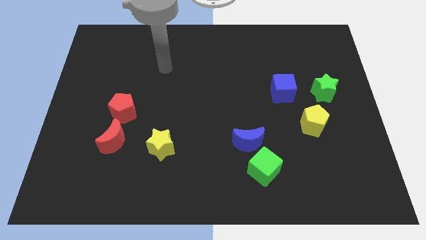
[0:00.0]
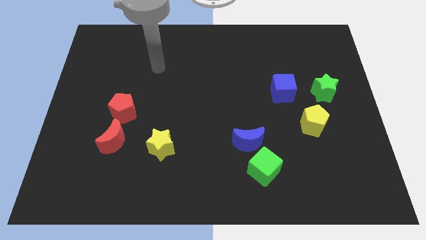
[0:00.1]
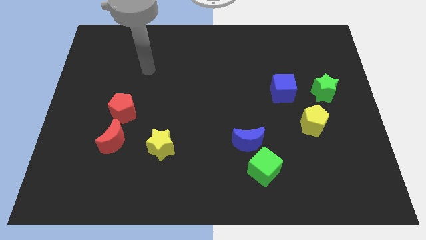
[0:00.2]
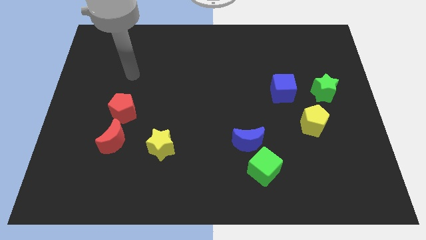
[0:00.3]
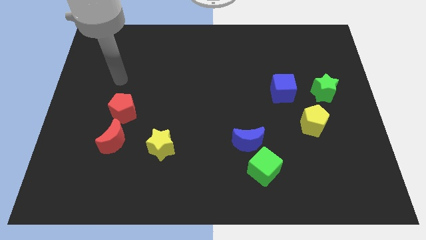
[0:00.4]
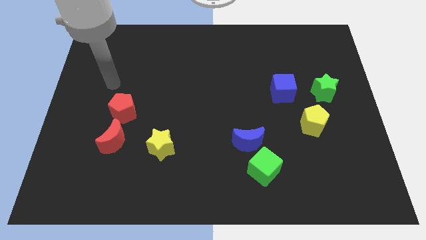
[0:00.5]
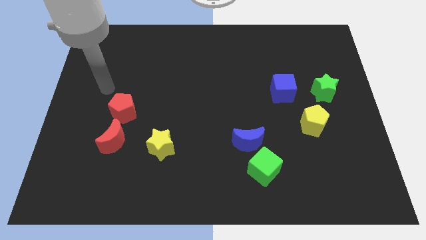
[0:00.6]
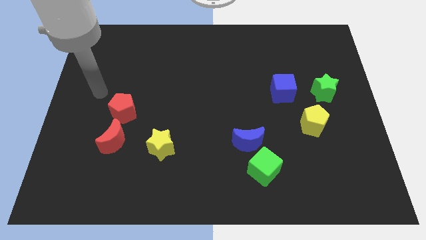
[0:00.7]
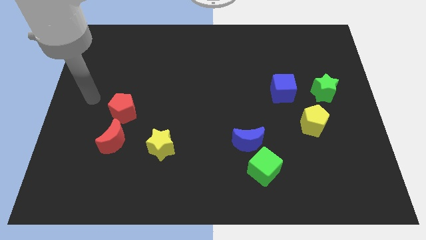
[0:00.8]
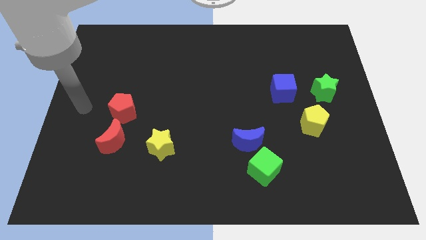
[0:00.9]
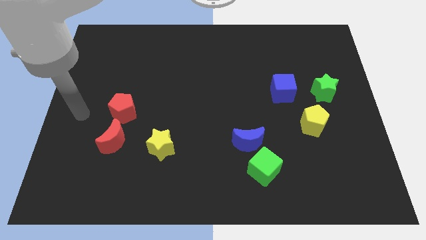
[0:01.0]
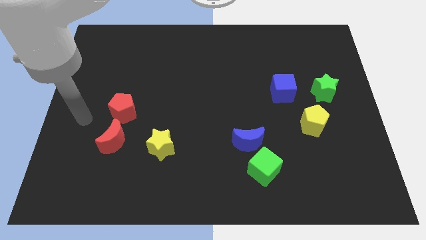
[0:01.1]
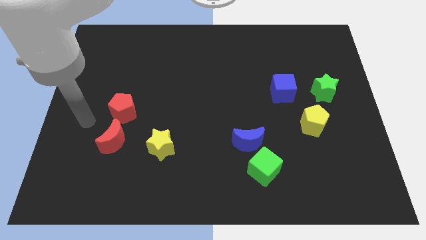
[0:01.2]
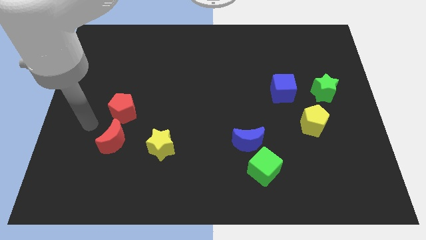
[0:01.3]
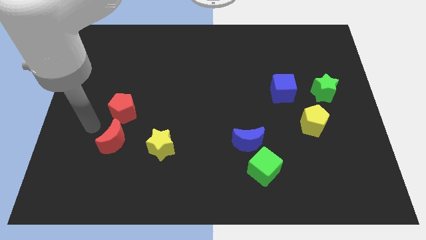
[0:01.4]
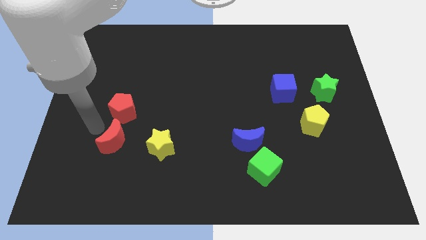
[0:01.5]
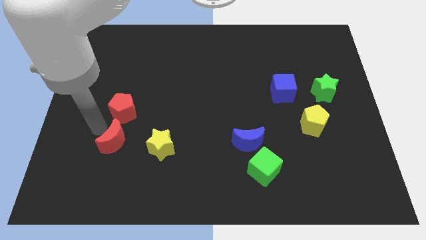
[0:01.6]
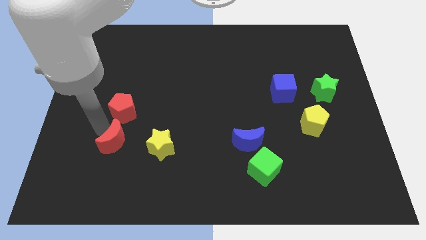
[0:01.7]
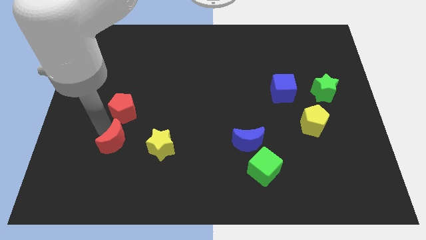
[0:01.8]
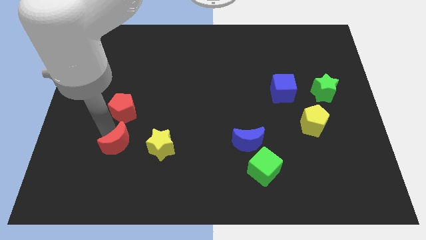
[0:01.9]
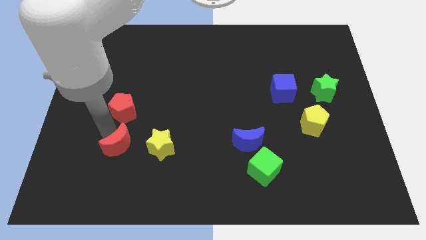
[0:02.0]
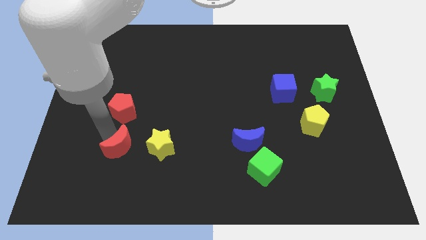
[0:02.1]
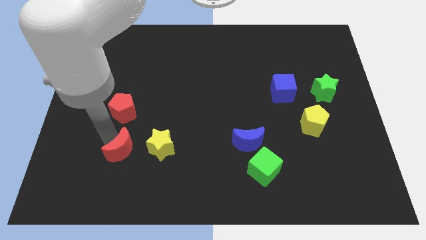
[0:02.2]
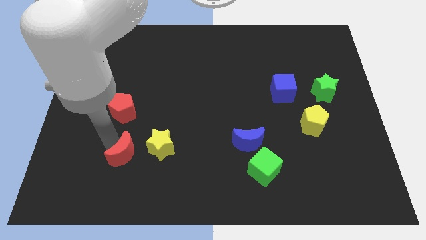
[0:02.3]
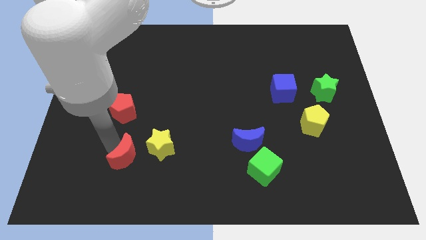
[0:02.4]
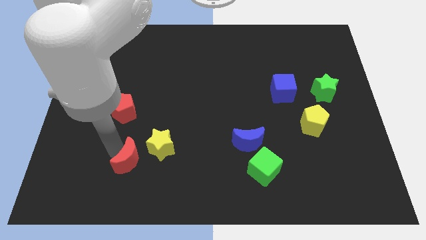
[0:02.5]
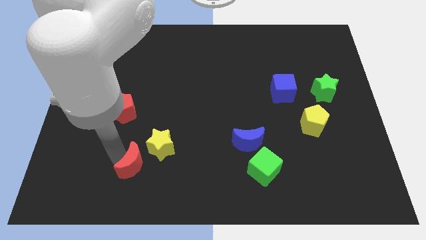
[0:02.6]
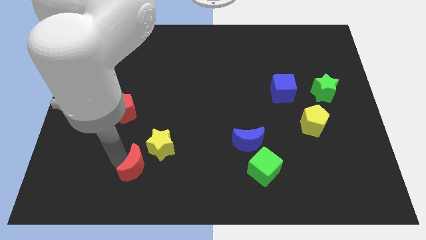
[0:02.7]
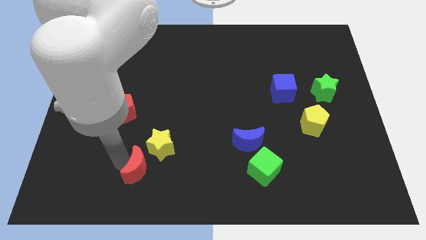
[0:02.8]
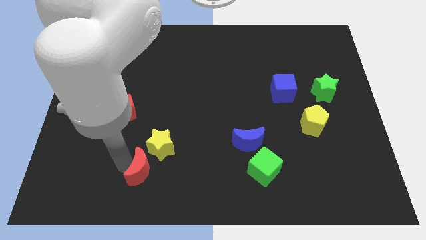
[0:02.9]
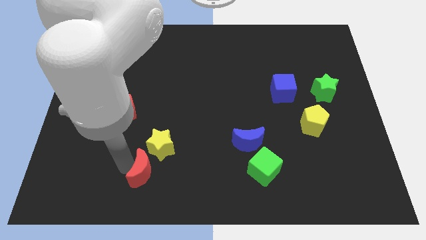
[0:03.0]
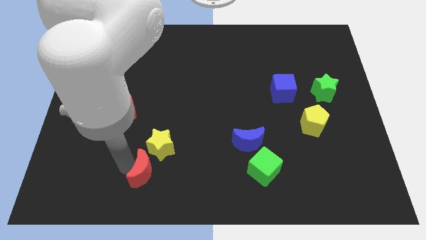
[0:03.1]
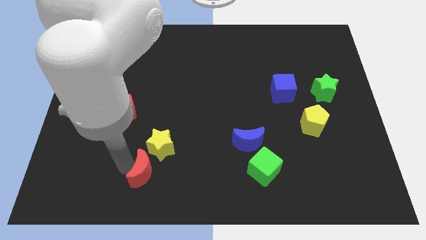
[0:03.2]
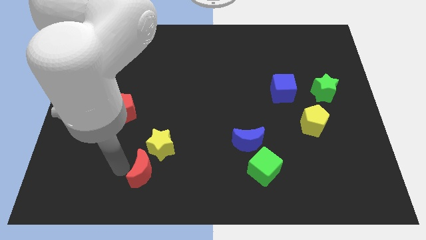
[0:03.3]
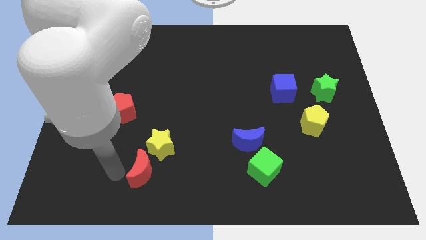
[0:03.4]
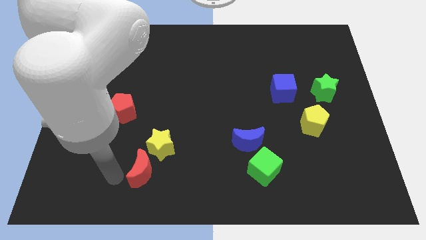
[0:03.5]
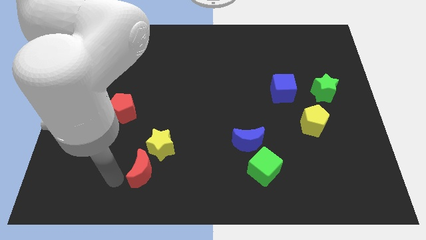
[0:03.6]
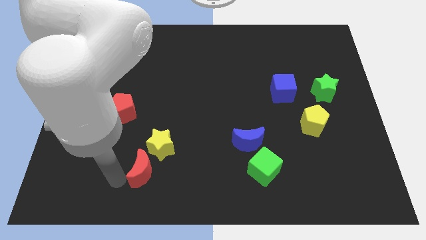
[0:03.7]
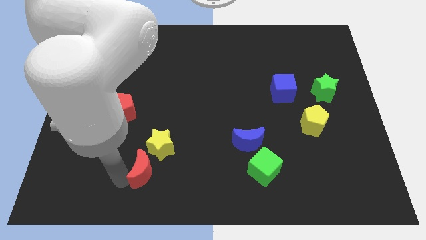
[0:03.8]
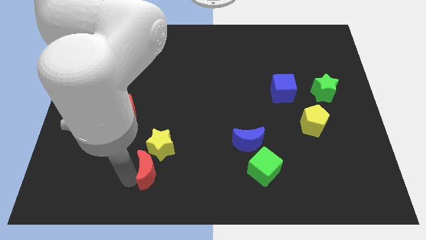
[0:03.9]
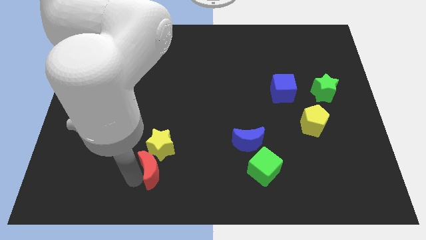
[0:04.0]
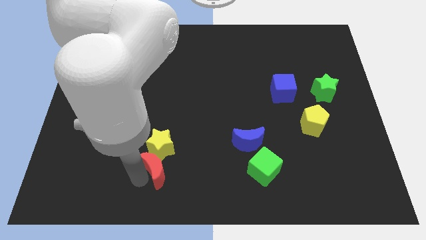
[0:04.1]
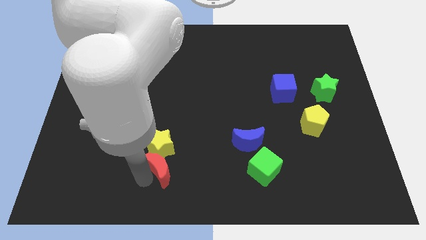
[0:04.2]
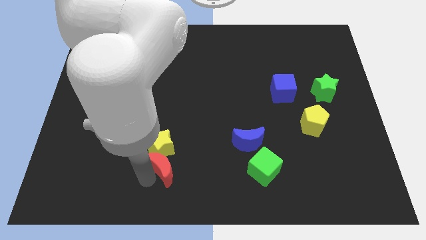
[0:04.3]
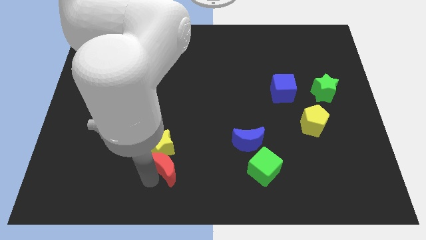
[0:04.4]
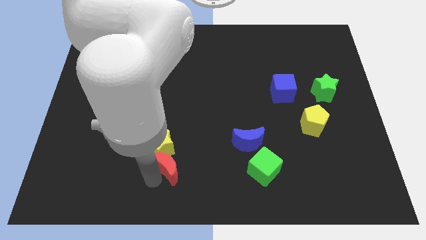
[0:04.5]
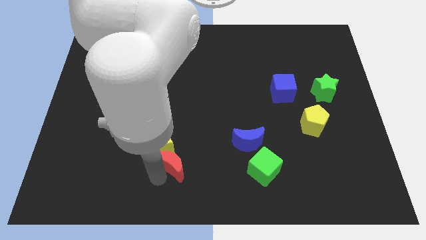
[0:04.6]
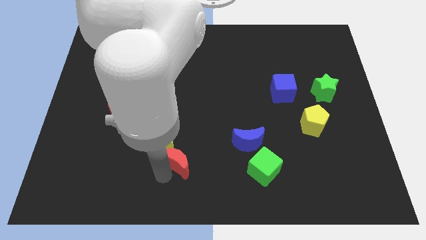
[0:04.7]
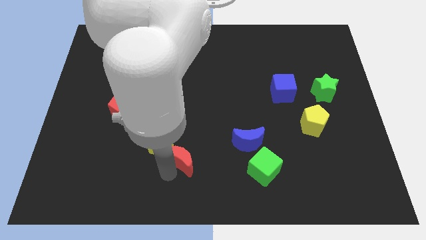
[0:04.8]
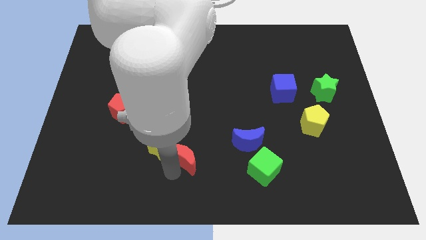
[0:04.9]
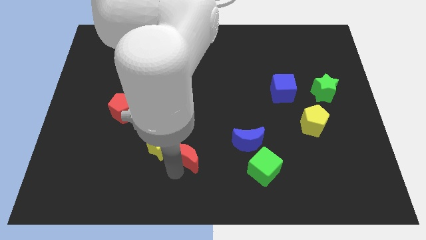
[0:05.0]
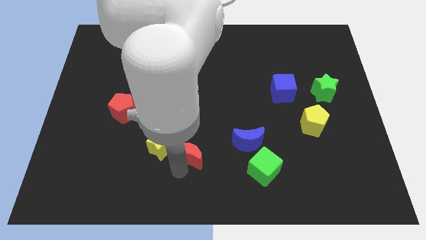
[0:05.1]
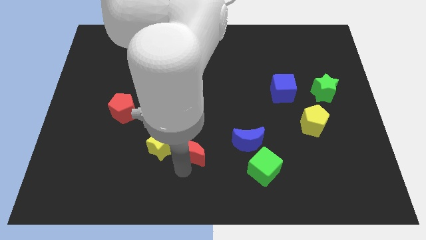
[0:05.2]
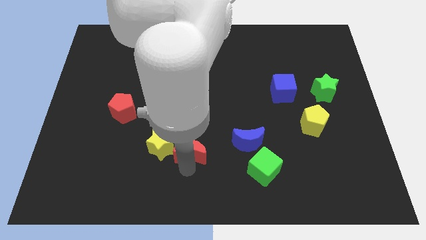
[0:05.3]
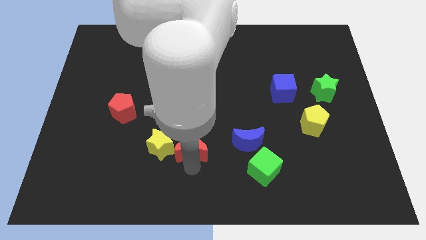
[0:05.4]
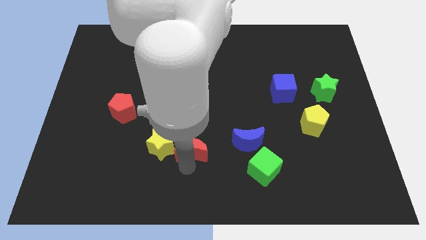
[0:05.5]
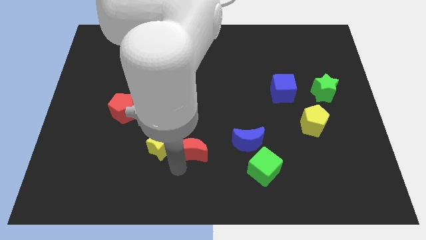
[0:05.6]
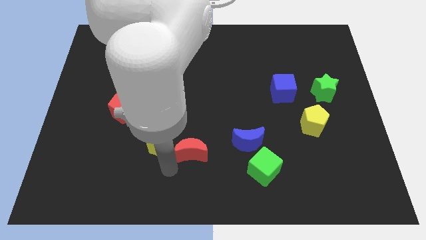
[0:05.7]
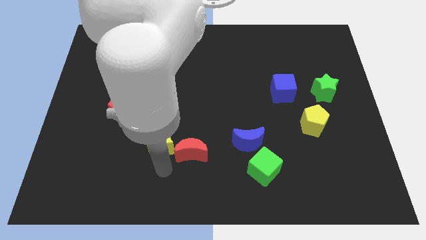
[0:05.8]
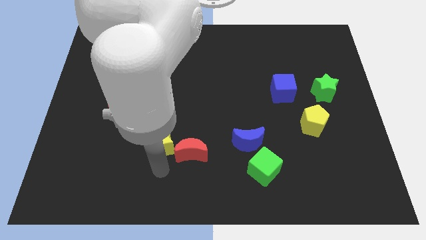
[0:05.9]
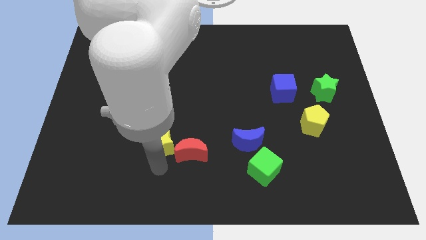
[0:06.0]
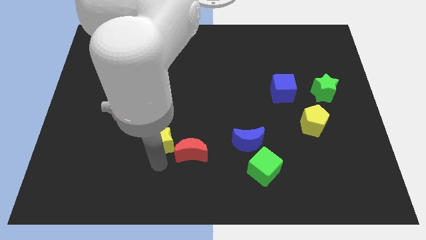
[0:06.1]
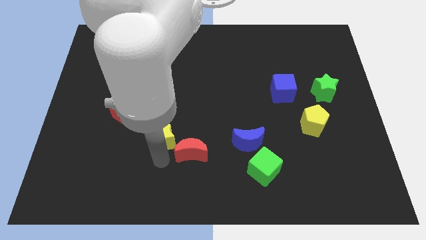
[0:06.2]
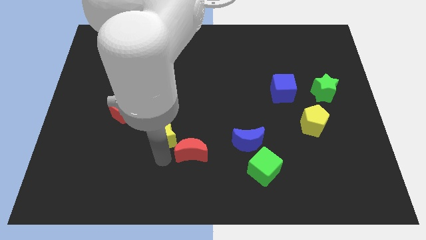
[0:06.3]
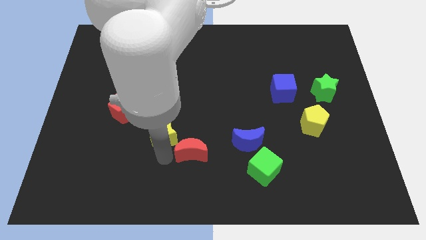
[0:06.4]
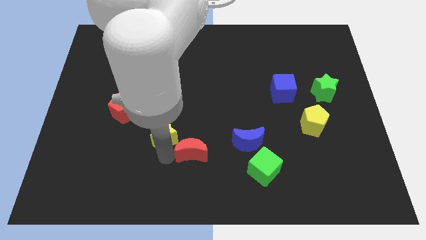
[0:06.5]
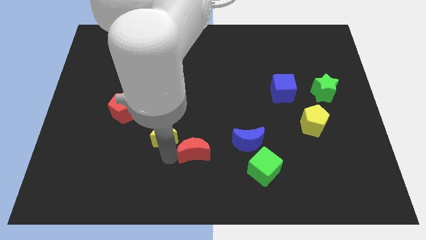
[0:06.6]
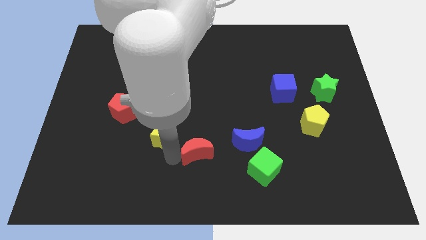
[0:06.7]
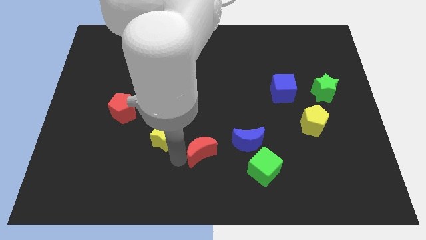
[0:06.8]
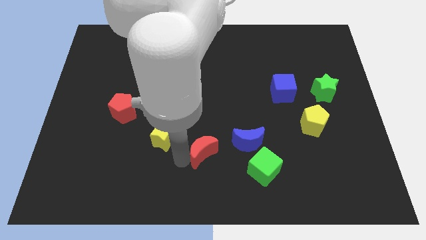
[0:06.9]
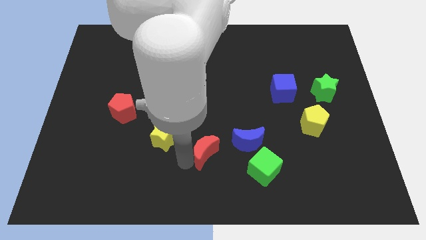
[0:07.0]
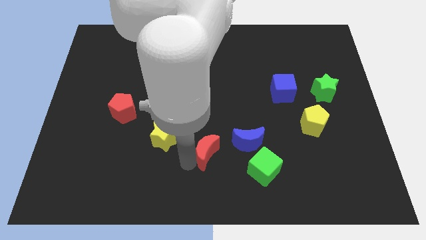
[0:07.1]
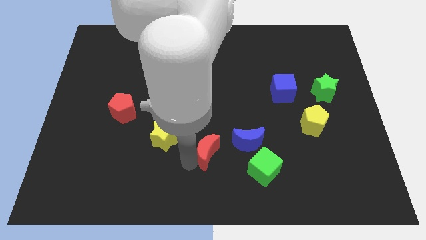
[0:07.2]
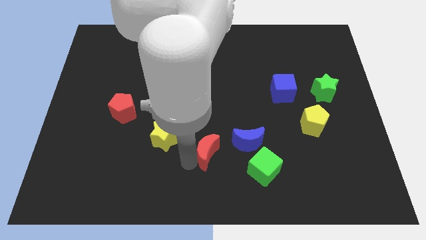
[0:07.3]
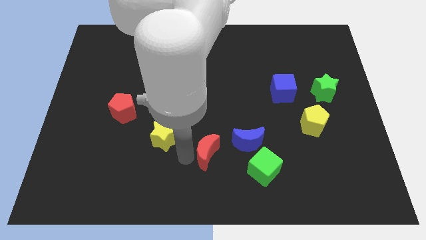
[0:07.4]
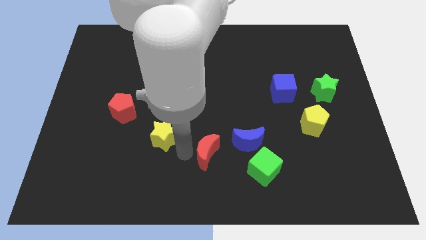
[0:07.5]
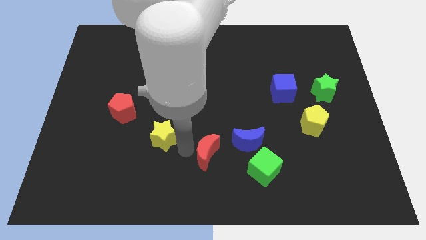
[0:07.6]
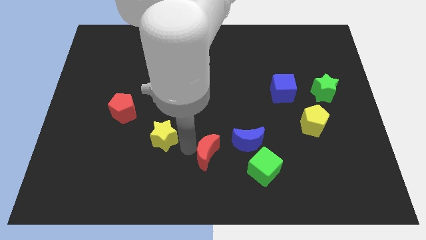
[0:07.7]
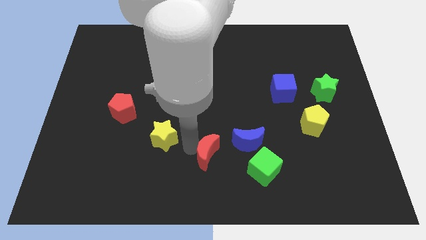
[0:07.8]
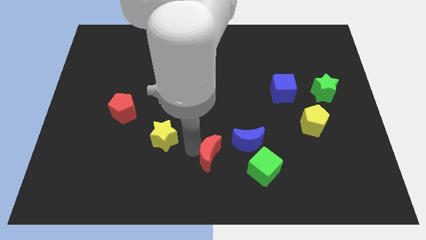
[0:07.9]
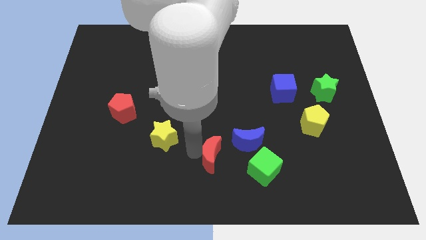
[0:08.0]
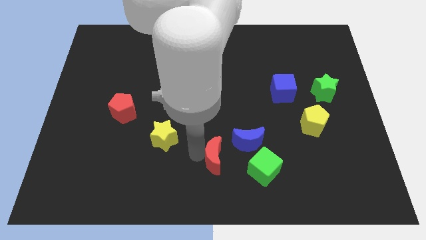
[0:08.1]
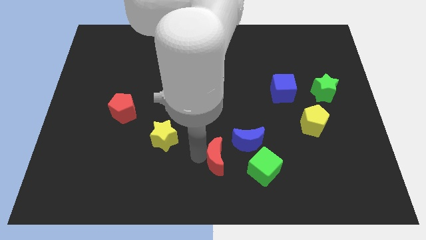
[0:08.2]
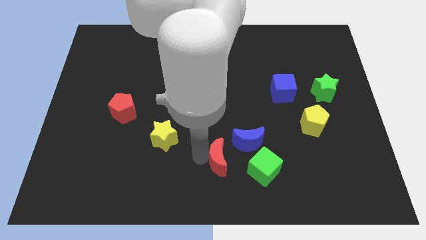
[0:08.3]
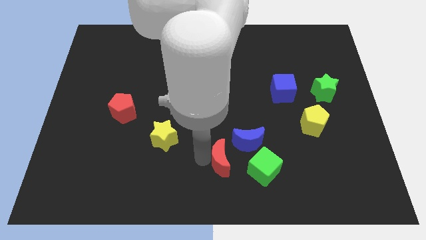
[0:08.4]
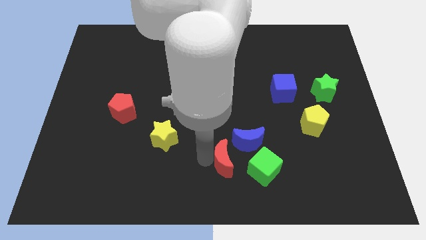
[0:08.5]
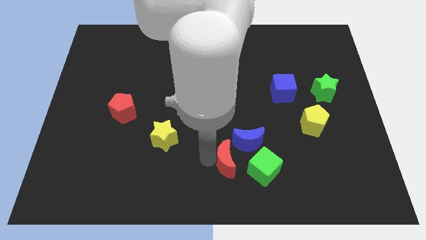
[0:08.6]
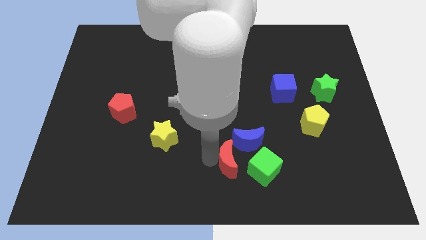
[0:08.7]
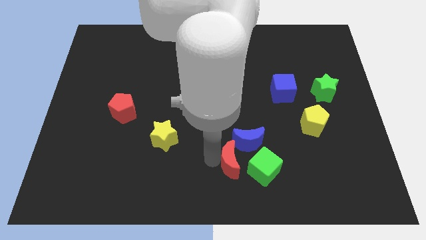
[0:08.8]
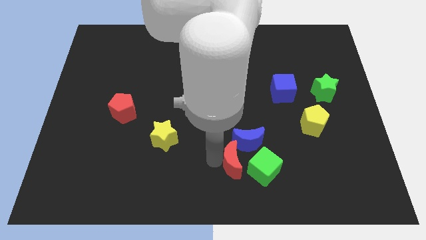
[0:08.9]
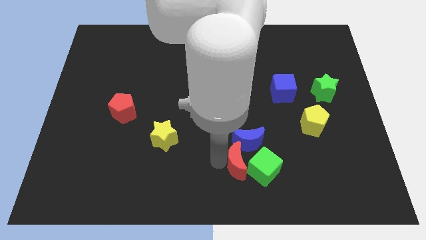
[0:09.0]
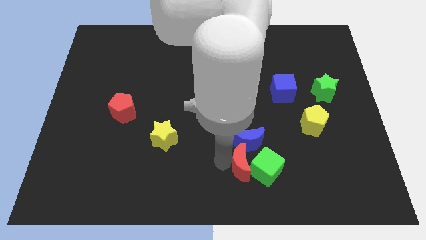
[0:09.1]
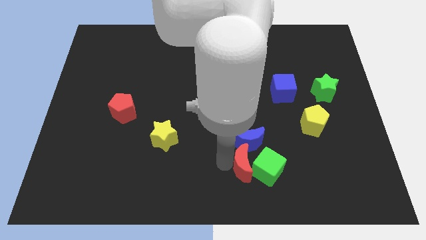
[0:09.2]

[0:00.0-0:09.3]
push the red moon close to the green cube
